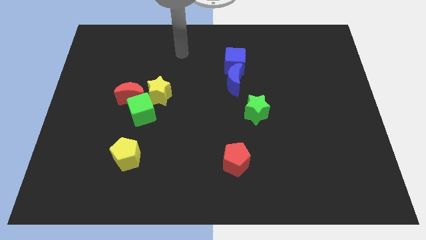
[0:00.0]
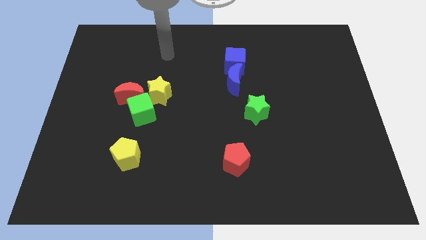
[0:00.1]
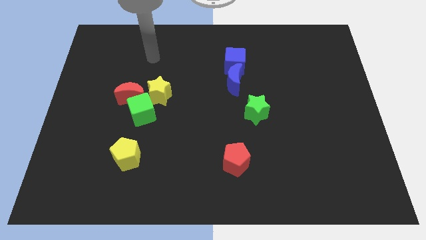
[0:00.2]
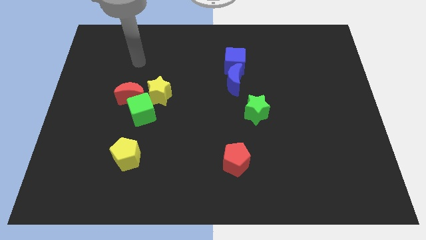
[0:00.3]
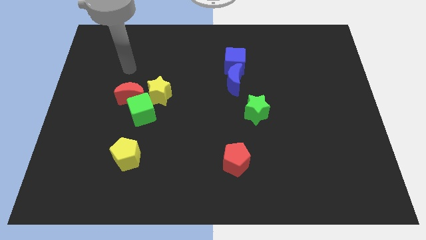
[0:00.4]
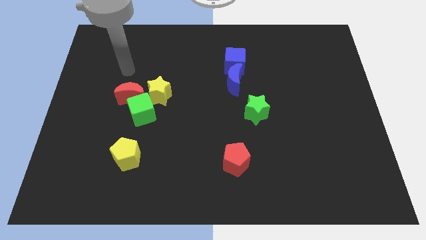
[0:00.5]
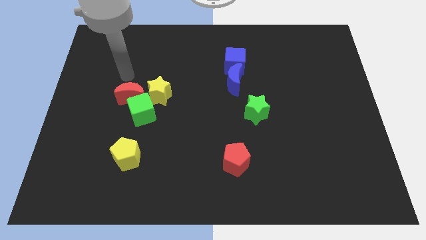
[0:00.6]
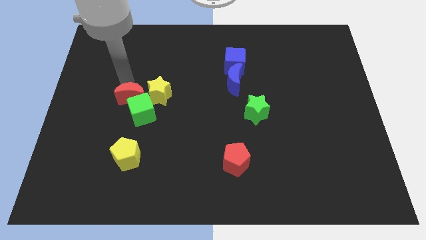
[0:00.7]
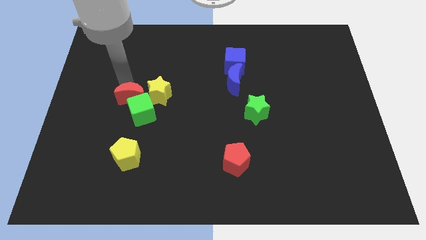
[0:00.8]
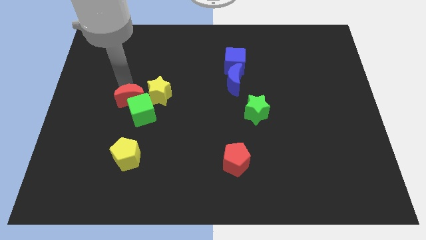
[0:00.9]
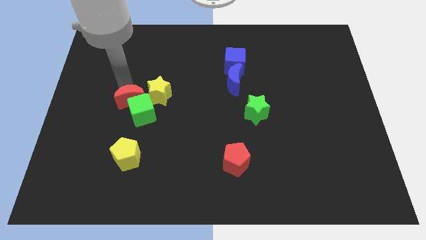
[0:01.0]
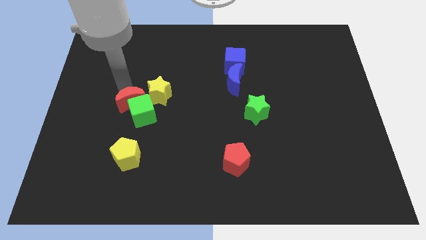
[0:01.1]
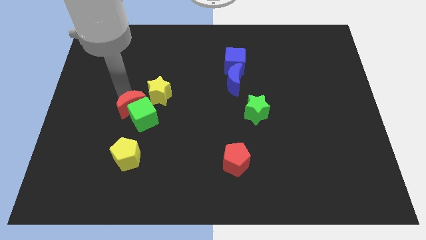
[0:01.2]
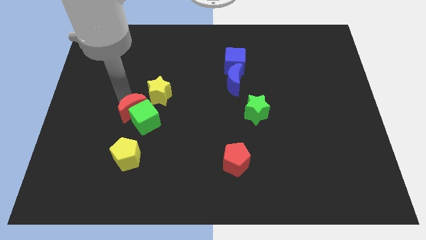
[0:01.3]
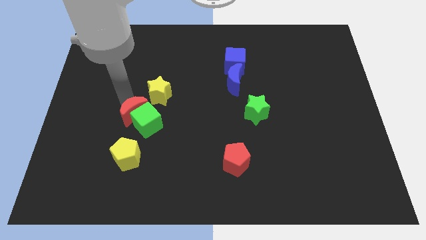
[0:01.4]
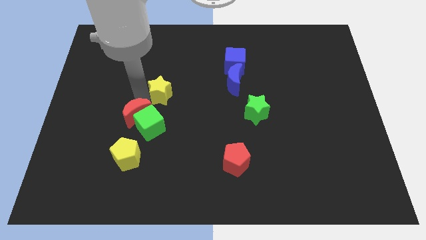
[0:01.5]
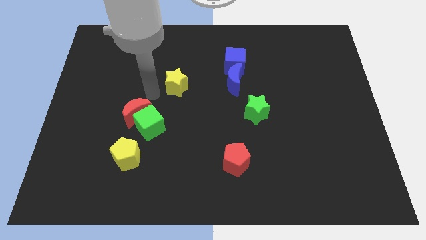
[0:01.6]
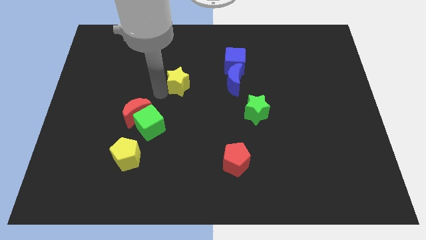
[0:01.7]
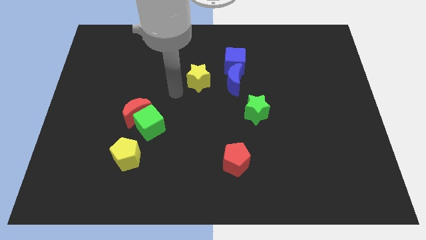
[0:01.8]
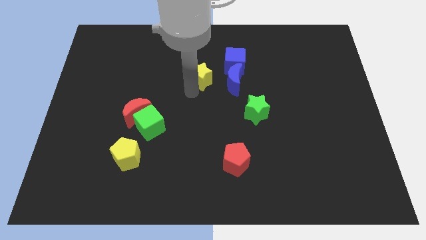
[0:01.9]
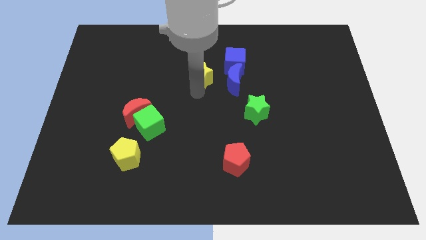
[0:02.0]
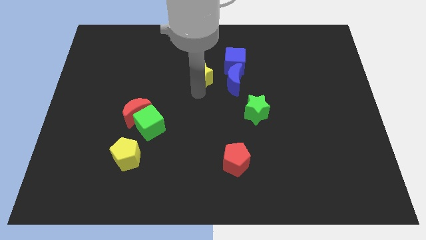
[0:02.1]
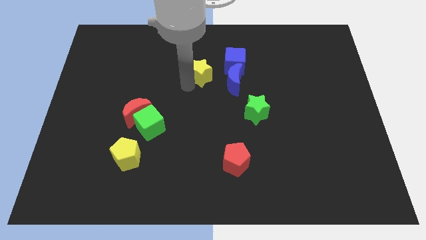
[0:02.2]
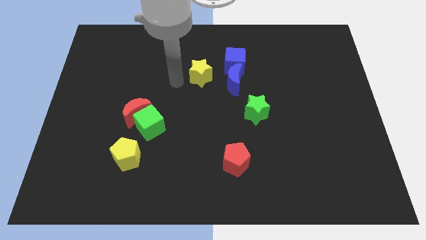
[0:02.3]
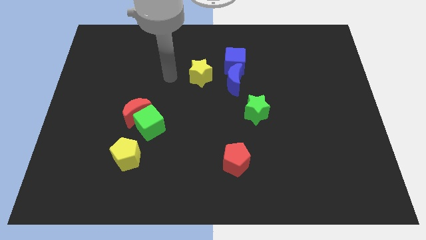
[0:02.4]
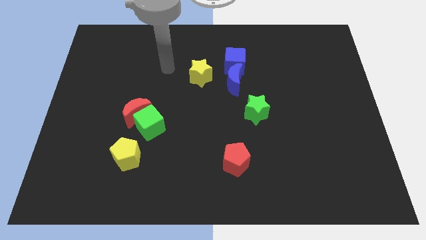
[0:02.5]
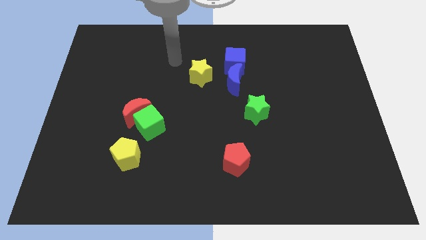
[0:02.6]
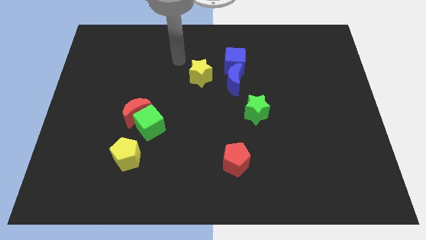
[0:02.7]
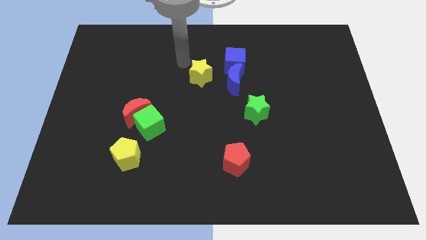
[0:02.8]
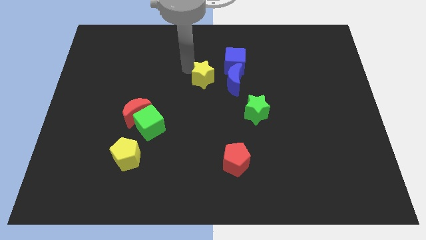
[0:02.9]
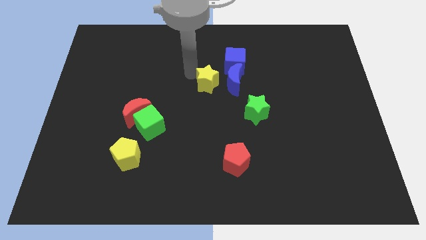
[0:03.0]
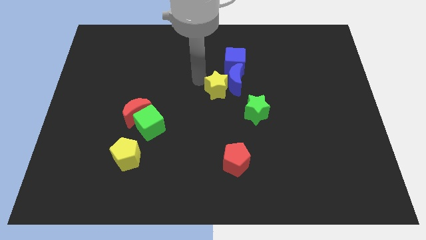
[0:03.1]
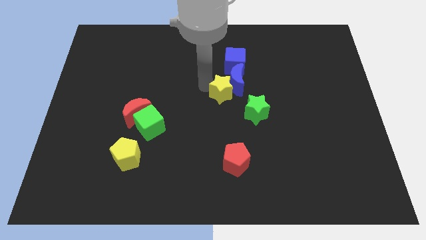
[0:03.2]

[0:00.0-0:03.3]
push the green cube red crescent and yellow star diagonal to each other

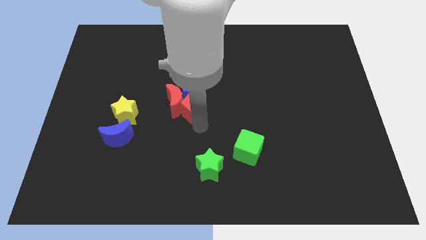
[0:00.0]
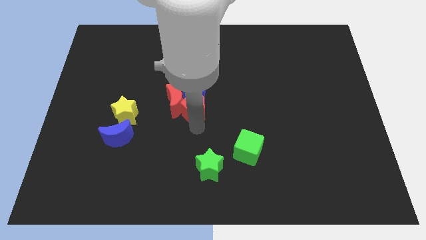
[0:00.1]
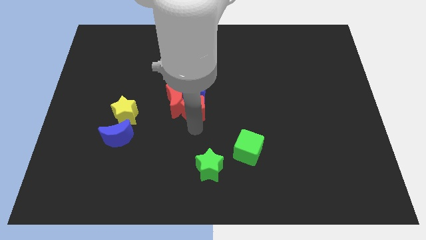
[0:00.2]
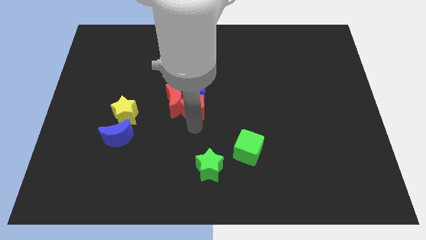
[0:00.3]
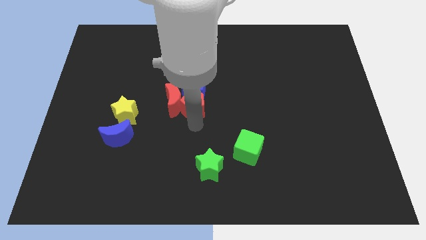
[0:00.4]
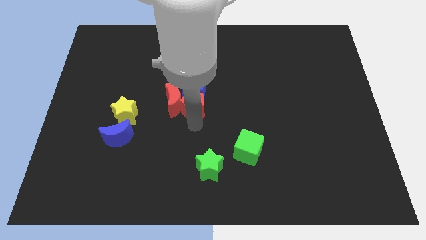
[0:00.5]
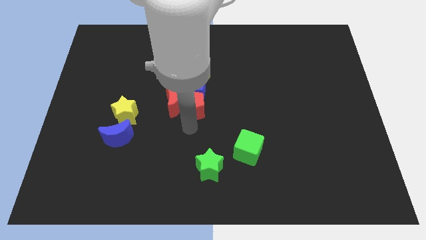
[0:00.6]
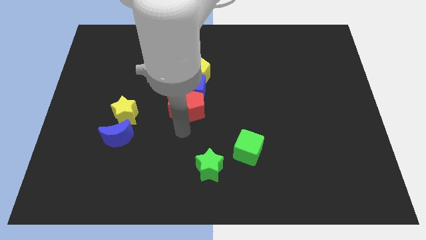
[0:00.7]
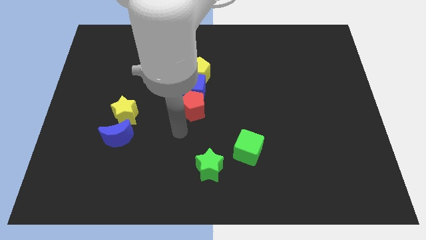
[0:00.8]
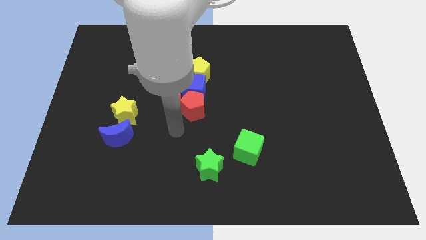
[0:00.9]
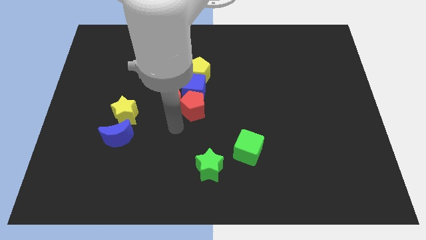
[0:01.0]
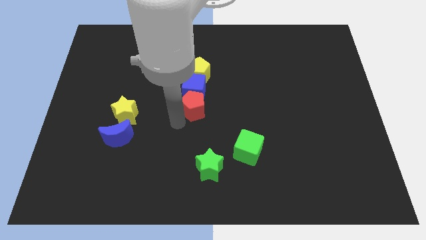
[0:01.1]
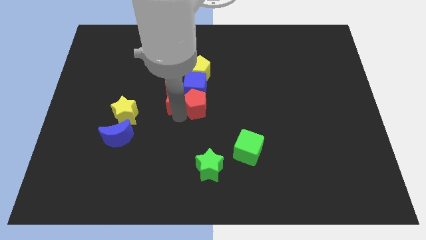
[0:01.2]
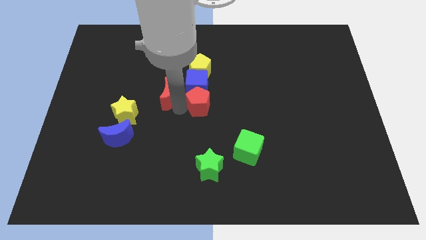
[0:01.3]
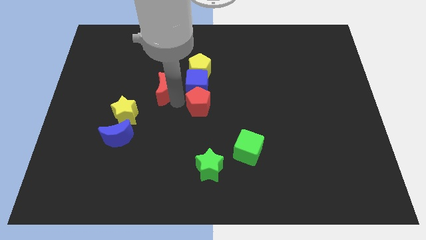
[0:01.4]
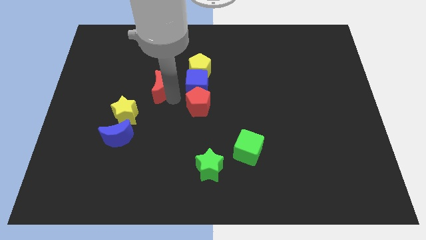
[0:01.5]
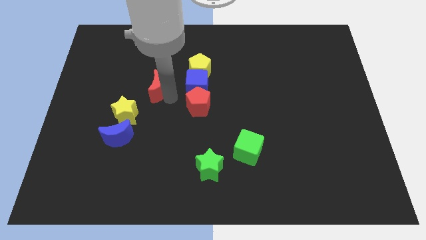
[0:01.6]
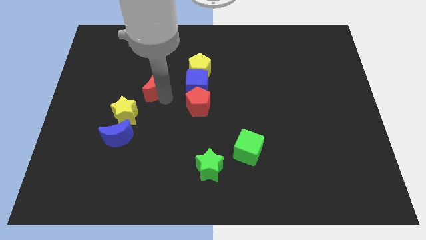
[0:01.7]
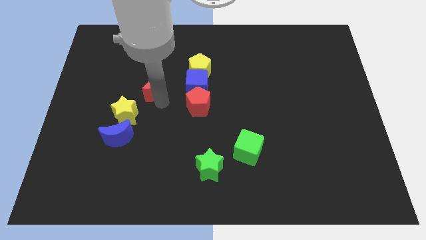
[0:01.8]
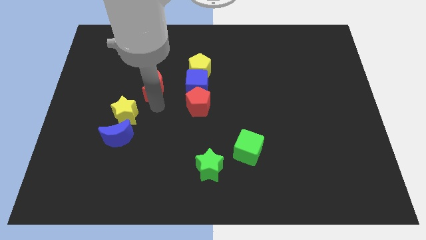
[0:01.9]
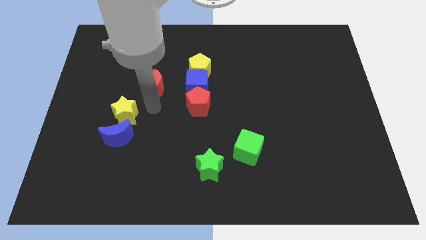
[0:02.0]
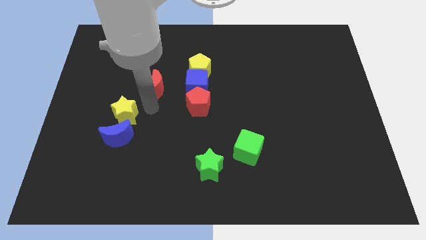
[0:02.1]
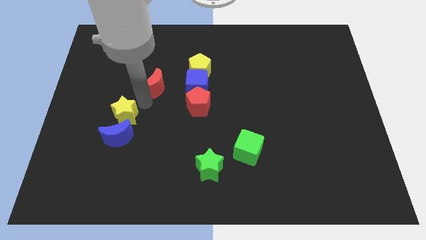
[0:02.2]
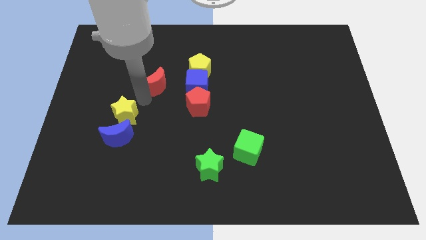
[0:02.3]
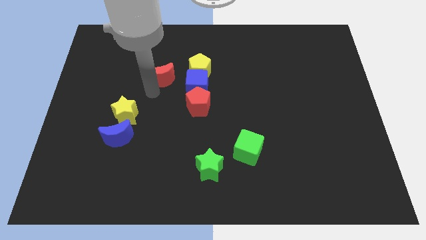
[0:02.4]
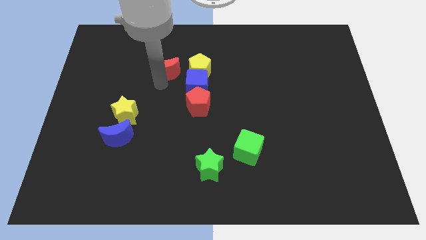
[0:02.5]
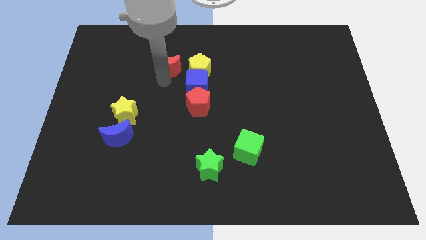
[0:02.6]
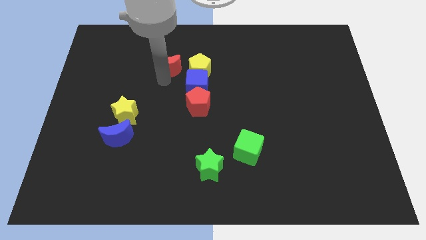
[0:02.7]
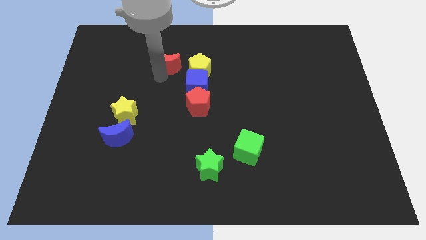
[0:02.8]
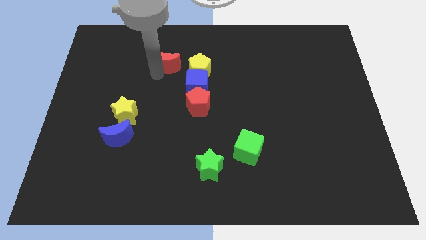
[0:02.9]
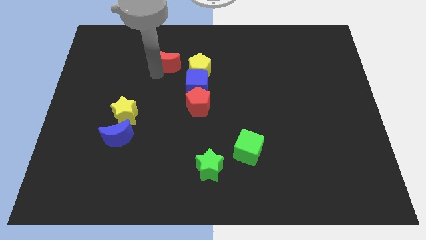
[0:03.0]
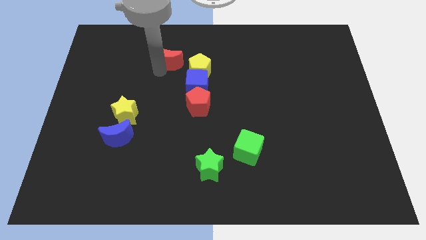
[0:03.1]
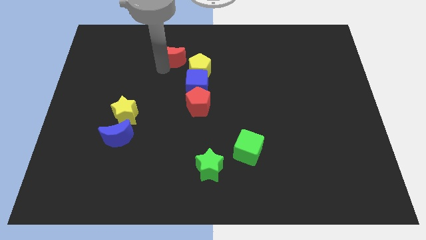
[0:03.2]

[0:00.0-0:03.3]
move red crescent from red pentagon

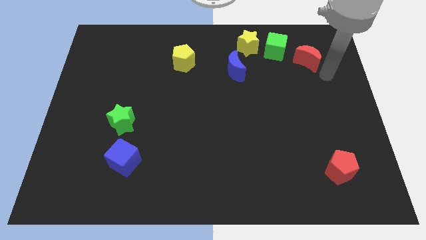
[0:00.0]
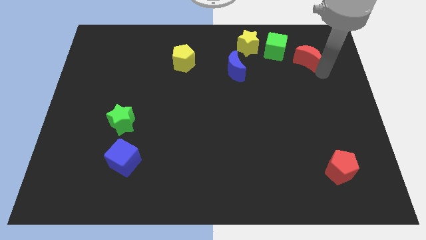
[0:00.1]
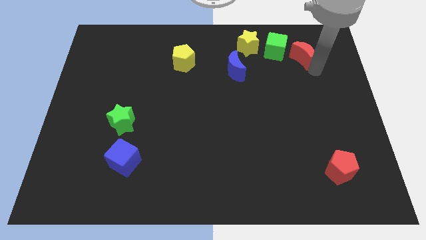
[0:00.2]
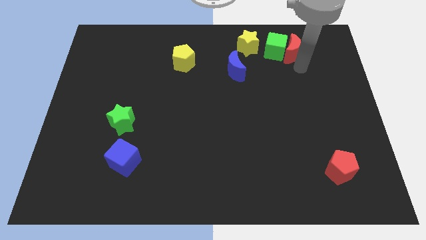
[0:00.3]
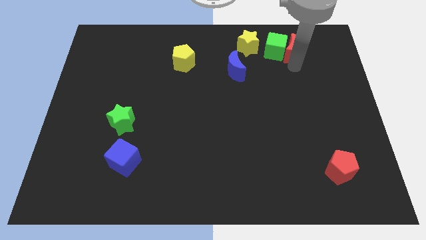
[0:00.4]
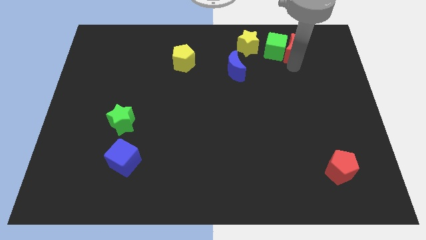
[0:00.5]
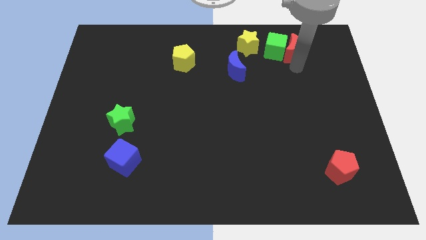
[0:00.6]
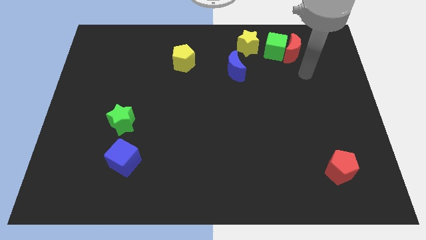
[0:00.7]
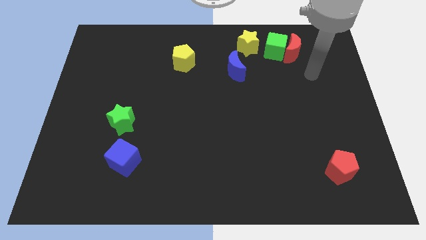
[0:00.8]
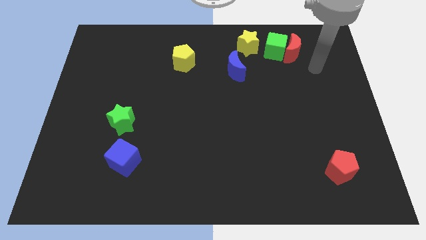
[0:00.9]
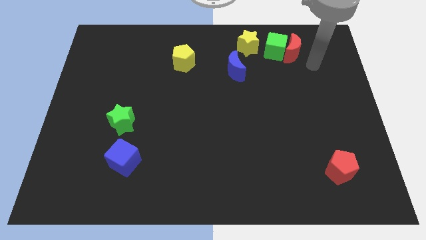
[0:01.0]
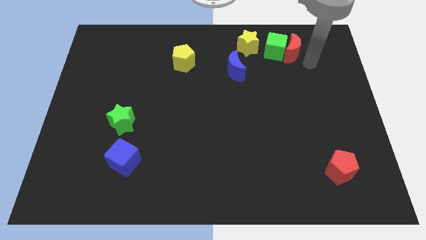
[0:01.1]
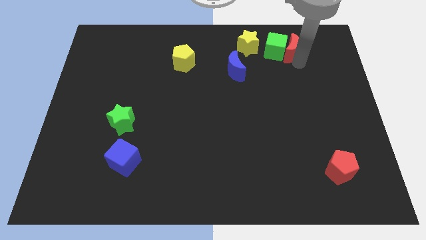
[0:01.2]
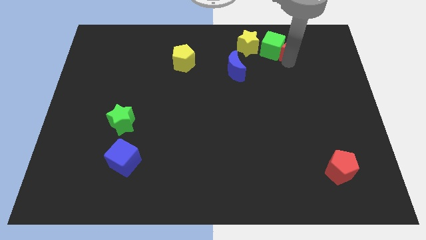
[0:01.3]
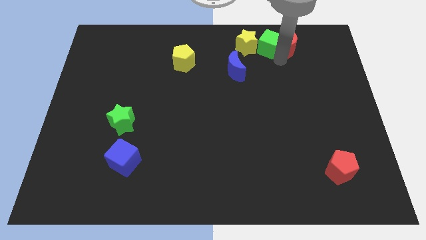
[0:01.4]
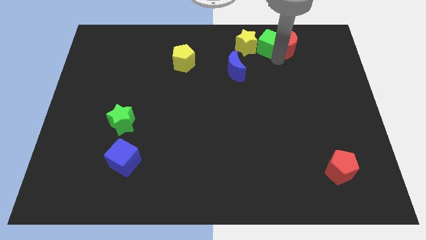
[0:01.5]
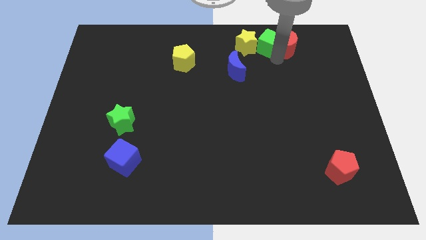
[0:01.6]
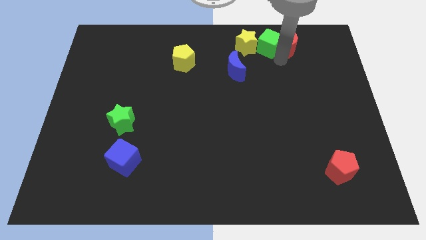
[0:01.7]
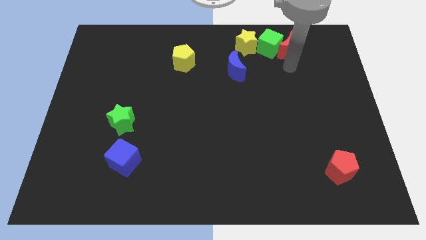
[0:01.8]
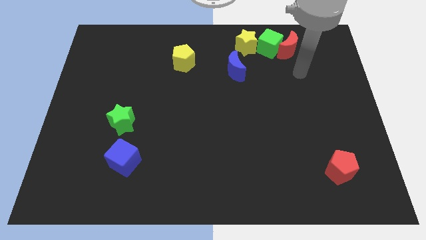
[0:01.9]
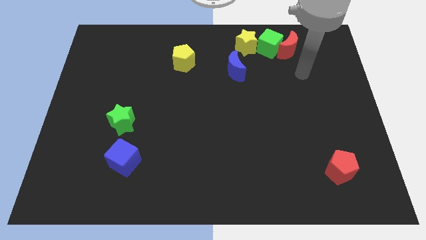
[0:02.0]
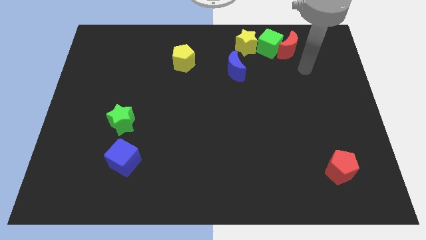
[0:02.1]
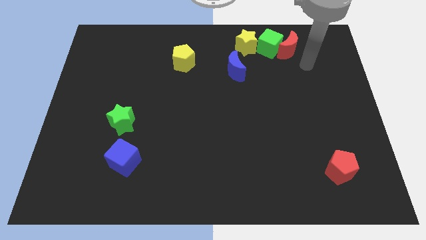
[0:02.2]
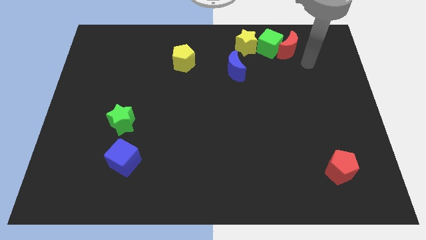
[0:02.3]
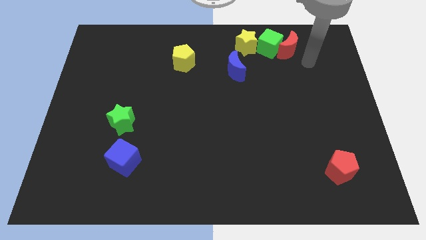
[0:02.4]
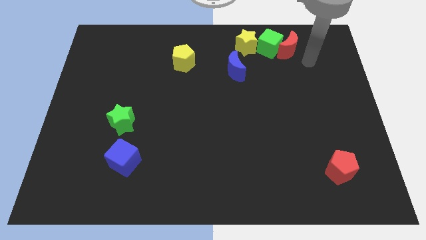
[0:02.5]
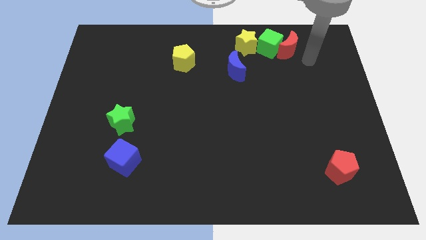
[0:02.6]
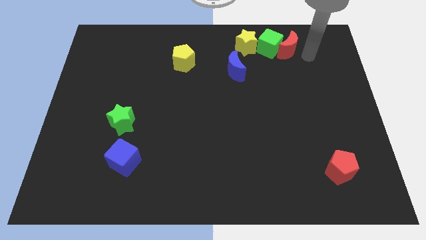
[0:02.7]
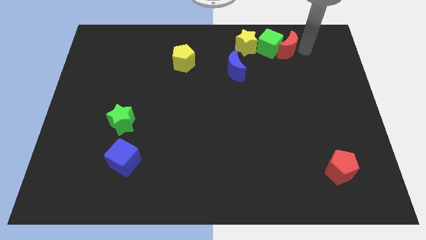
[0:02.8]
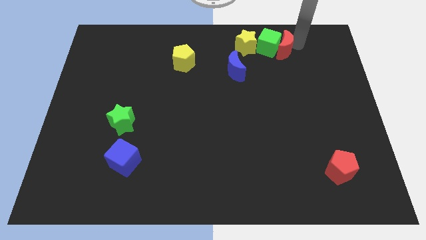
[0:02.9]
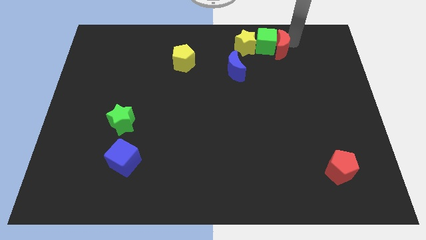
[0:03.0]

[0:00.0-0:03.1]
move the group of blocks to the top right of board
